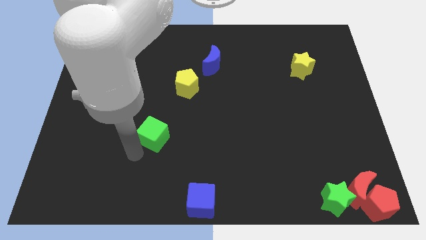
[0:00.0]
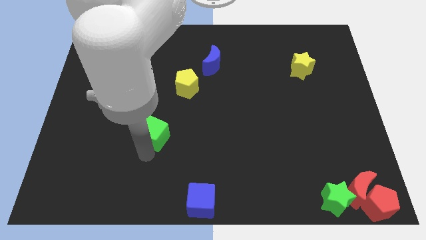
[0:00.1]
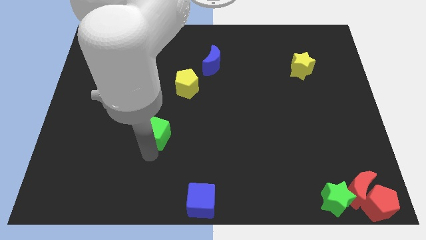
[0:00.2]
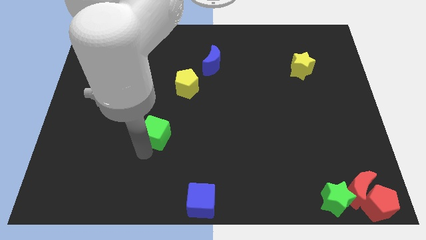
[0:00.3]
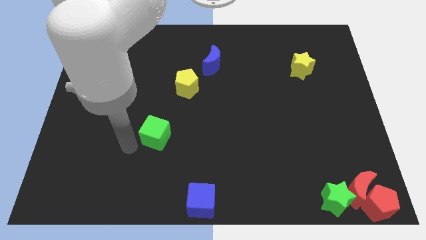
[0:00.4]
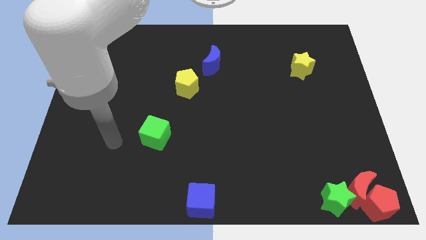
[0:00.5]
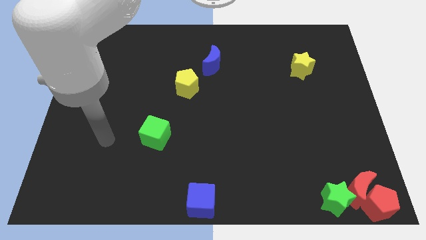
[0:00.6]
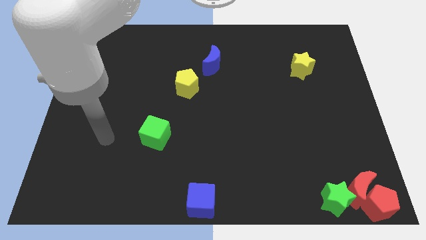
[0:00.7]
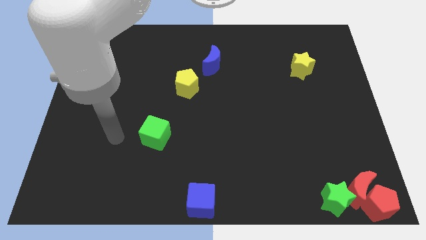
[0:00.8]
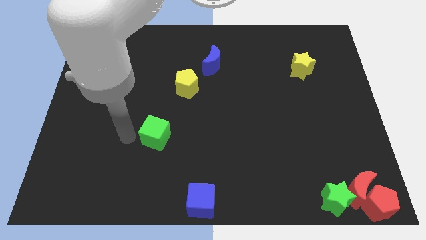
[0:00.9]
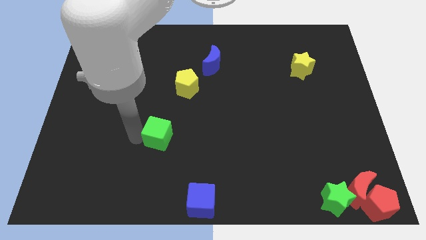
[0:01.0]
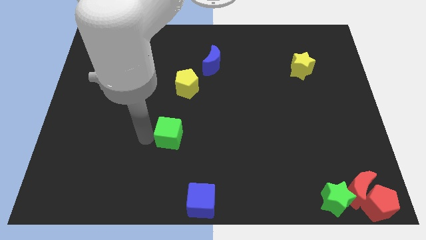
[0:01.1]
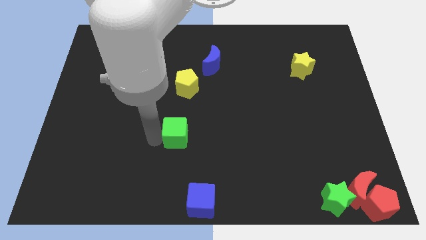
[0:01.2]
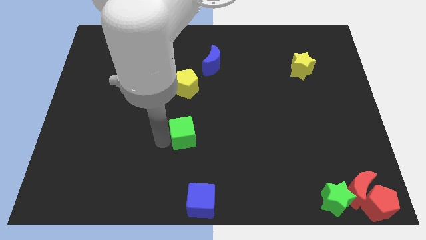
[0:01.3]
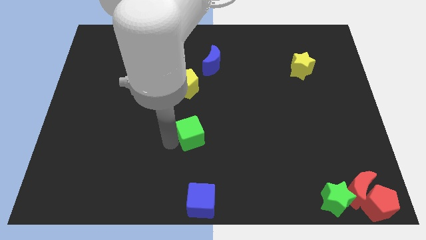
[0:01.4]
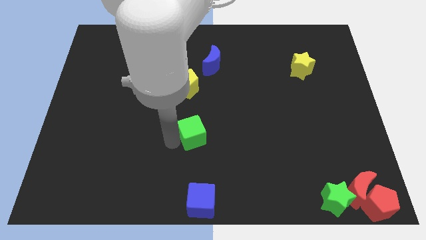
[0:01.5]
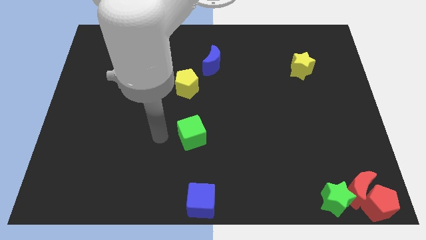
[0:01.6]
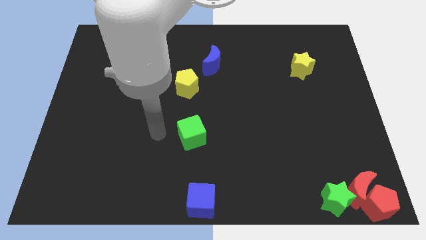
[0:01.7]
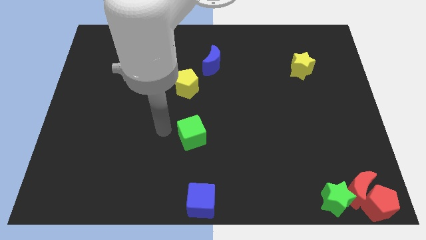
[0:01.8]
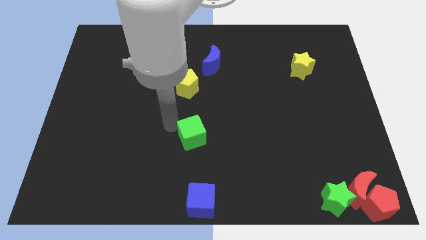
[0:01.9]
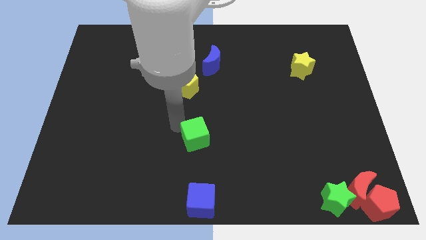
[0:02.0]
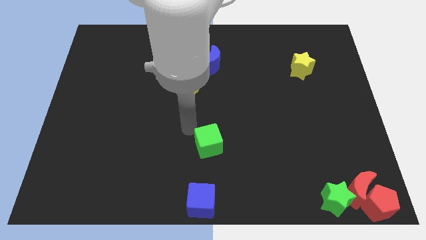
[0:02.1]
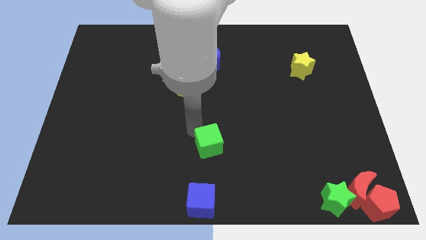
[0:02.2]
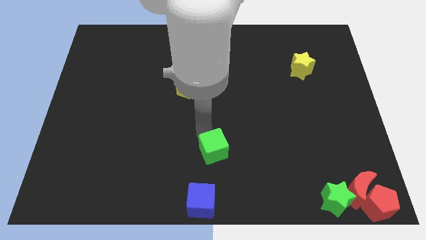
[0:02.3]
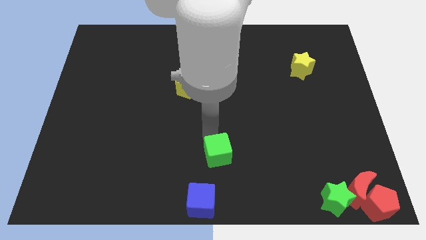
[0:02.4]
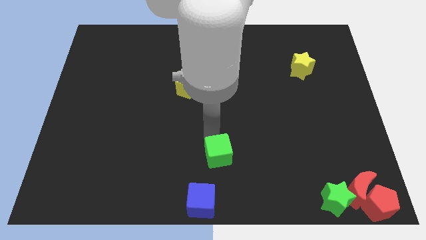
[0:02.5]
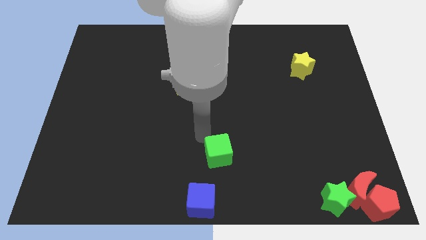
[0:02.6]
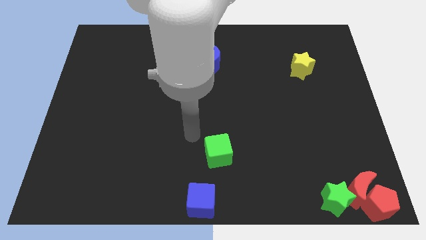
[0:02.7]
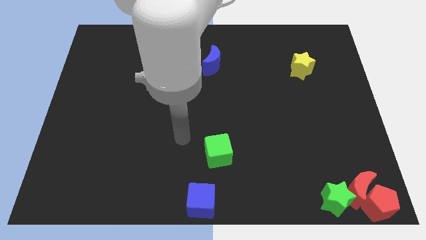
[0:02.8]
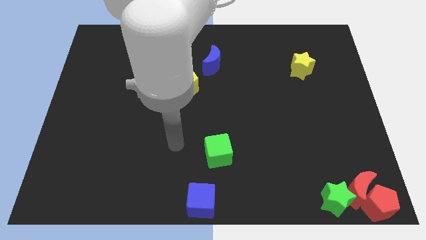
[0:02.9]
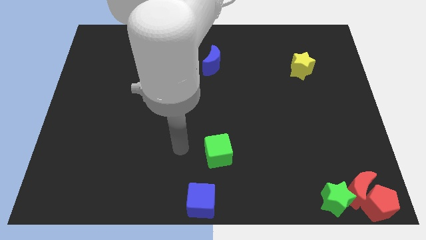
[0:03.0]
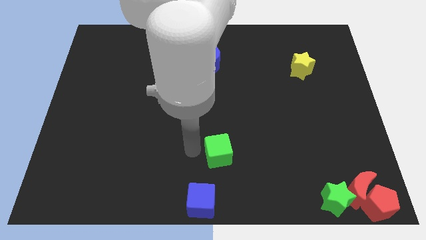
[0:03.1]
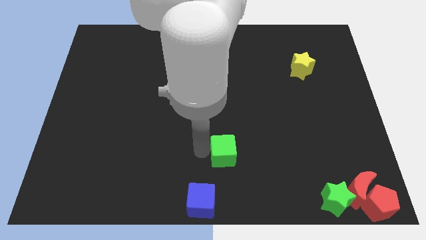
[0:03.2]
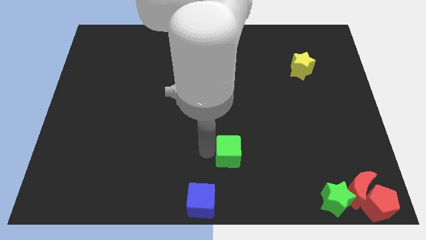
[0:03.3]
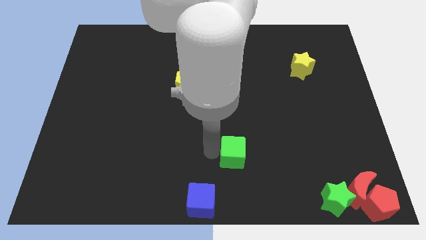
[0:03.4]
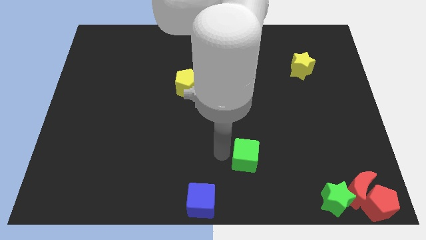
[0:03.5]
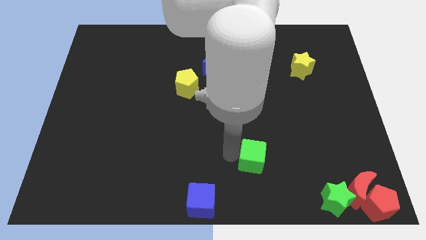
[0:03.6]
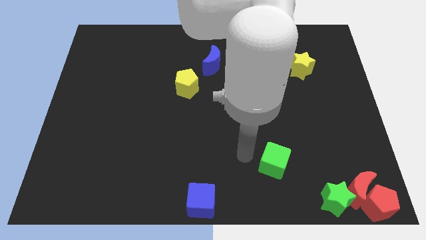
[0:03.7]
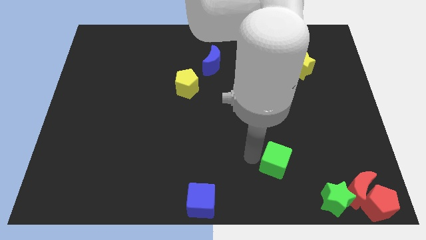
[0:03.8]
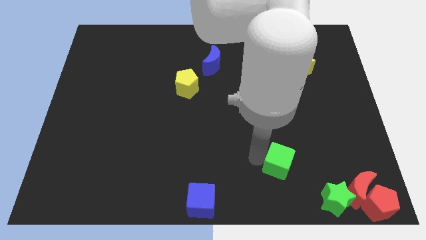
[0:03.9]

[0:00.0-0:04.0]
slide the green cube diagonally on the top right side of the blue cube

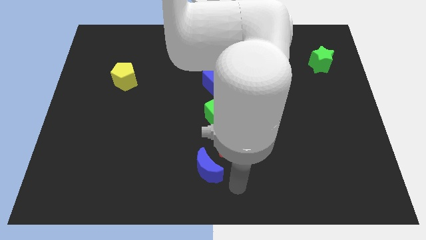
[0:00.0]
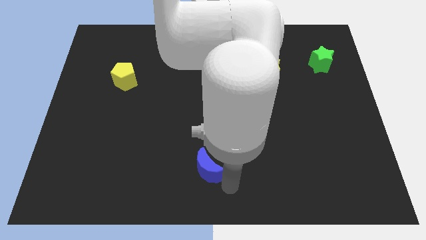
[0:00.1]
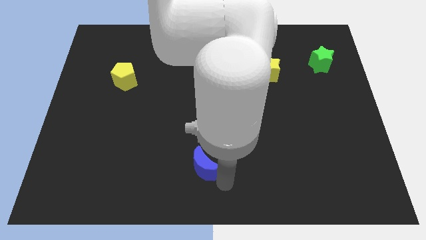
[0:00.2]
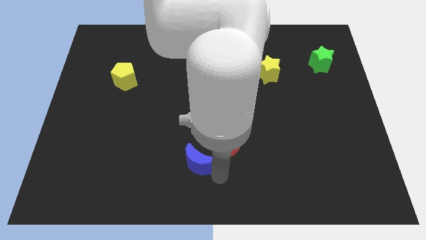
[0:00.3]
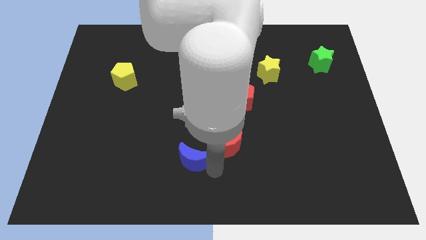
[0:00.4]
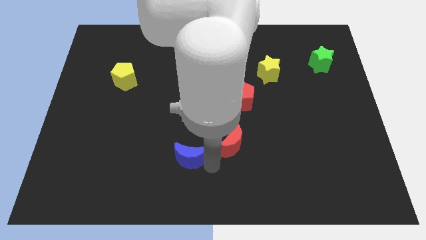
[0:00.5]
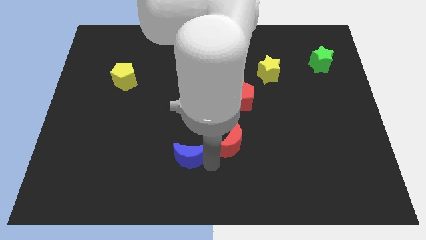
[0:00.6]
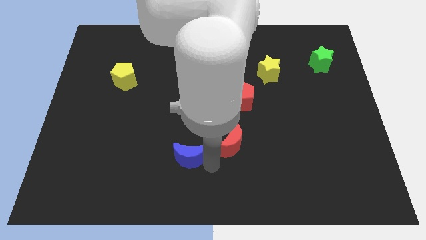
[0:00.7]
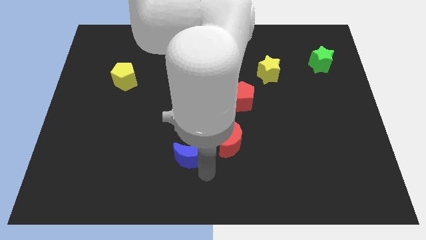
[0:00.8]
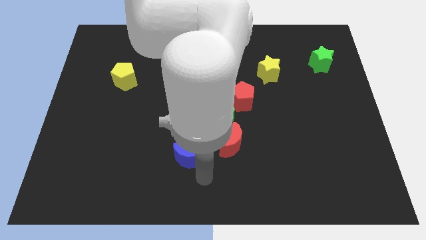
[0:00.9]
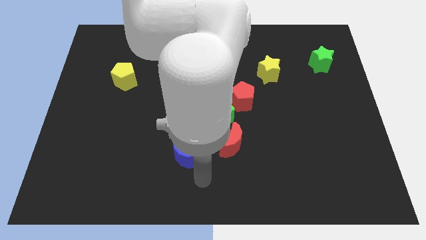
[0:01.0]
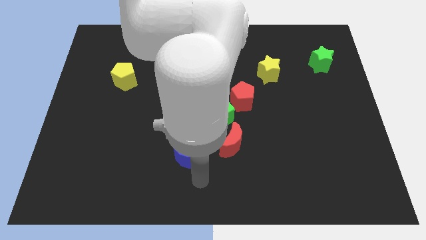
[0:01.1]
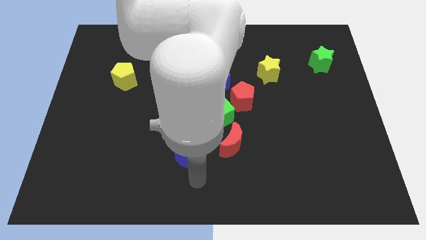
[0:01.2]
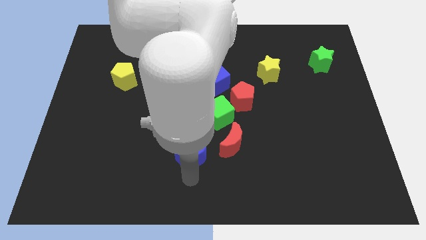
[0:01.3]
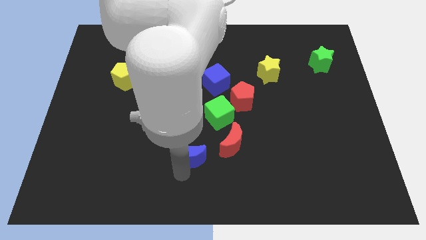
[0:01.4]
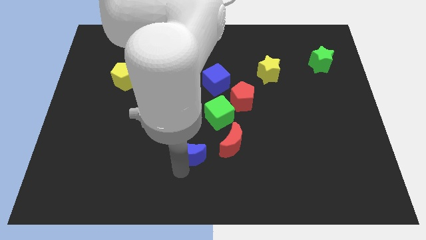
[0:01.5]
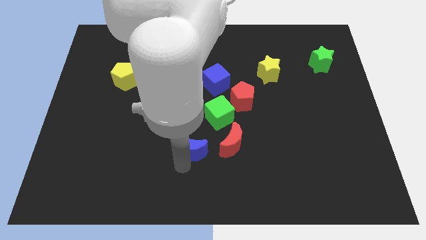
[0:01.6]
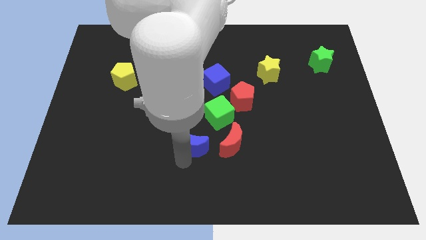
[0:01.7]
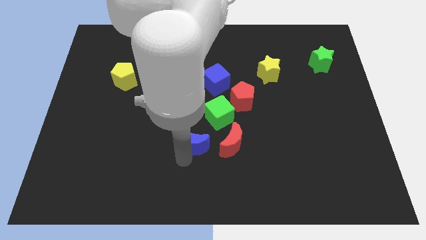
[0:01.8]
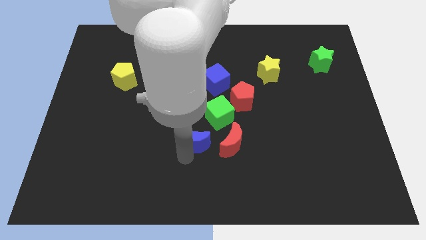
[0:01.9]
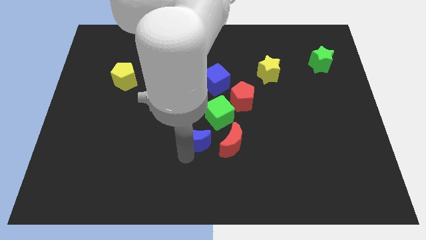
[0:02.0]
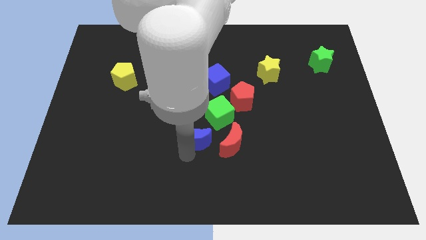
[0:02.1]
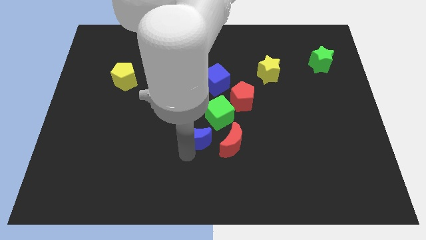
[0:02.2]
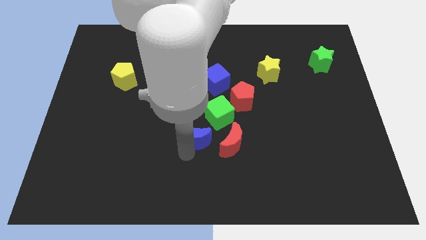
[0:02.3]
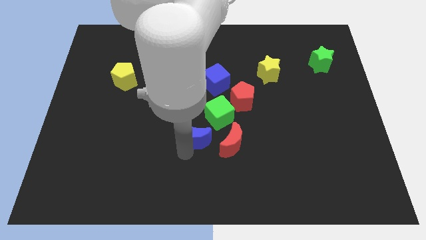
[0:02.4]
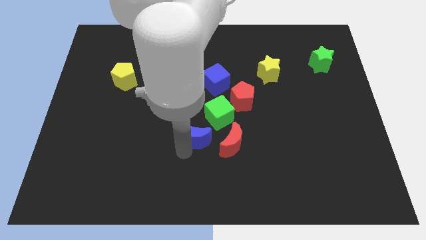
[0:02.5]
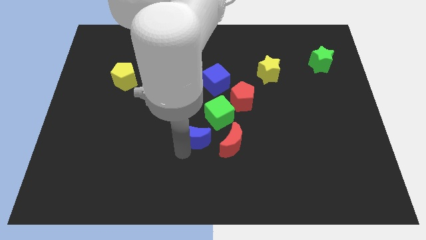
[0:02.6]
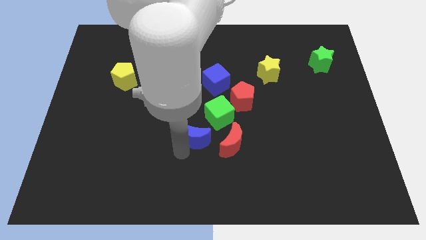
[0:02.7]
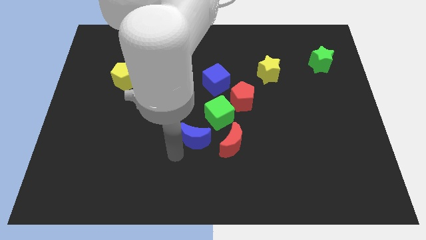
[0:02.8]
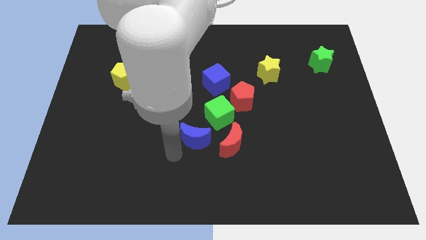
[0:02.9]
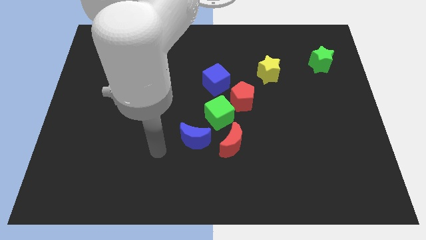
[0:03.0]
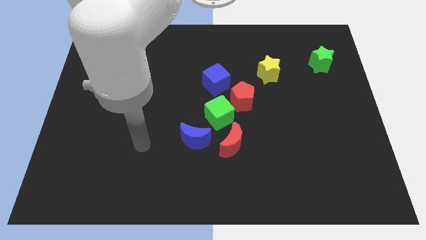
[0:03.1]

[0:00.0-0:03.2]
move the blue moon left to the red moon

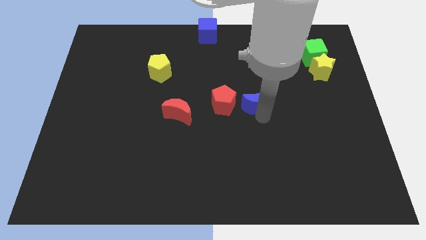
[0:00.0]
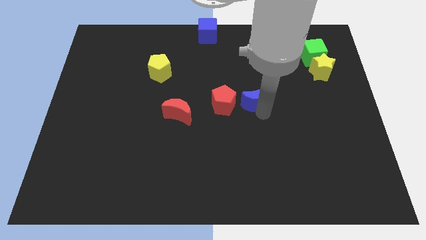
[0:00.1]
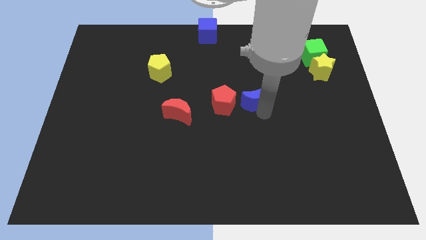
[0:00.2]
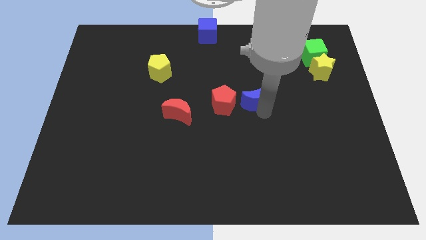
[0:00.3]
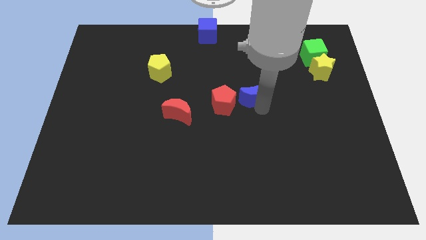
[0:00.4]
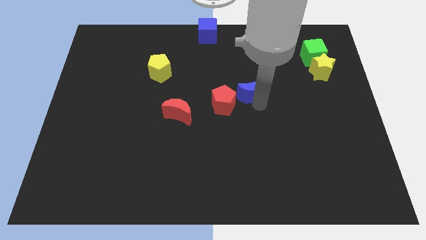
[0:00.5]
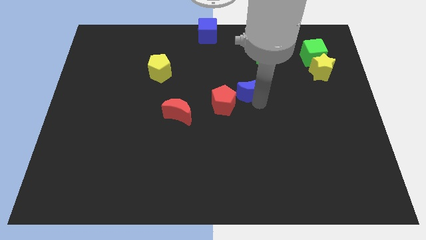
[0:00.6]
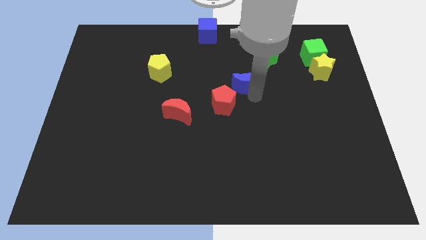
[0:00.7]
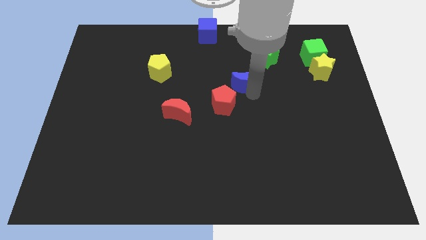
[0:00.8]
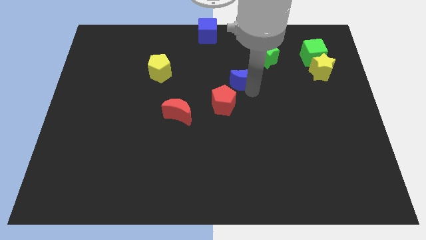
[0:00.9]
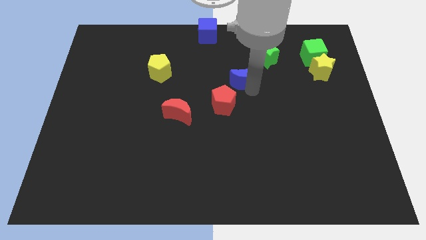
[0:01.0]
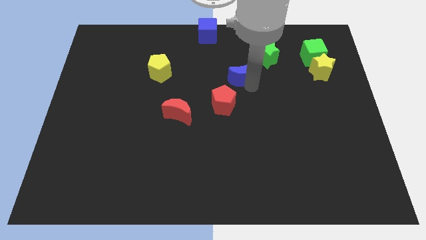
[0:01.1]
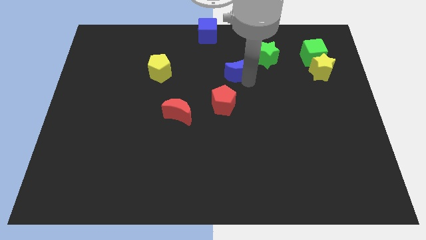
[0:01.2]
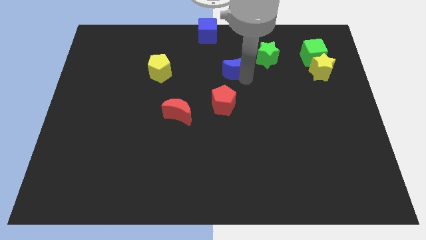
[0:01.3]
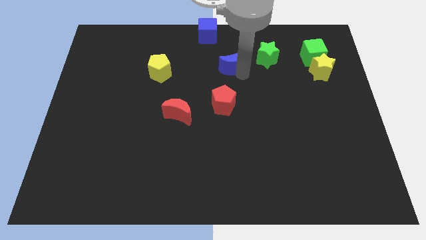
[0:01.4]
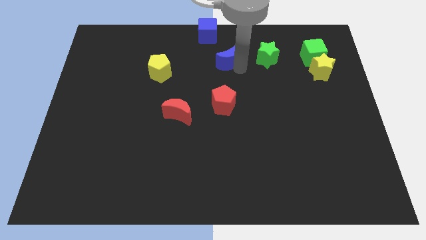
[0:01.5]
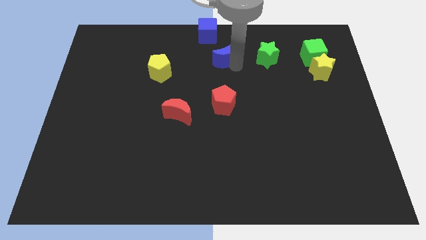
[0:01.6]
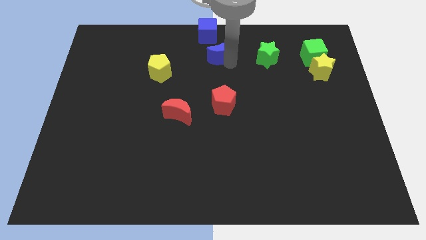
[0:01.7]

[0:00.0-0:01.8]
slide the blue crescent vertically above the red pentagon

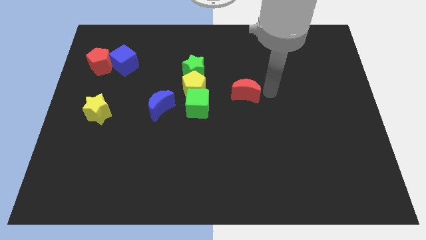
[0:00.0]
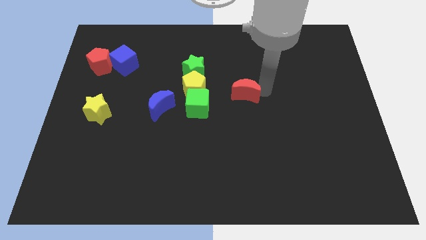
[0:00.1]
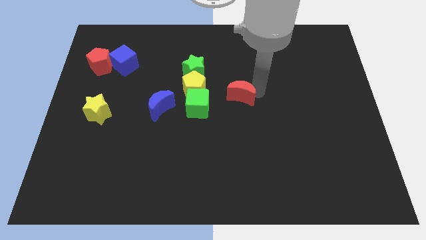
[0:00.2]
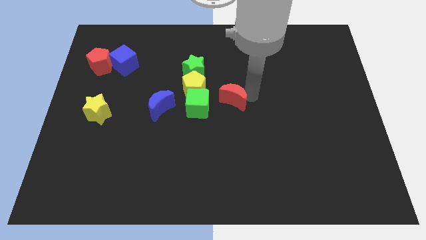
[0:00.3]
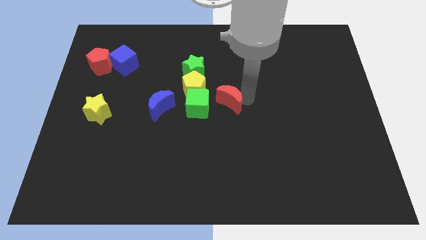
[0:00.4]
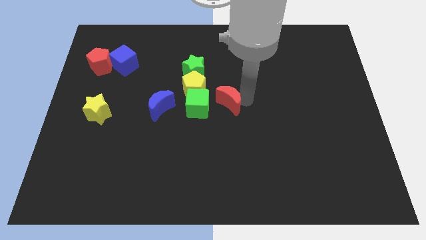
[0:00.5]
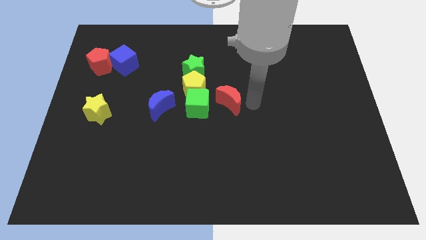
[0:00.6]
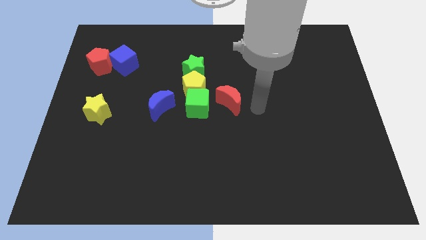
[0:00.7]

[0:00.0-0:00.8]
place the red crescent to the right of the green cube
